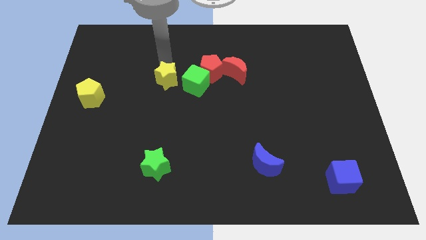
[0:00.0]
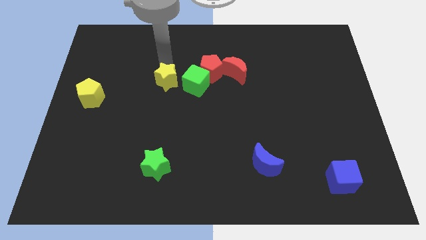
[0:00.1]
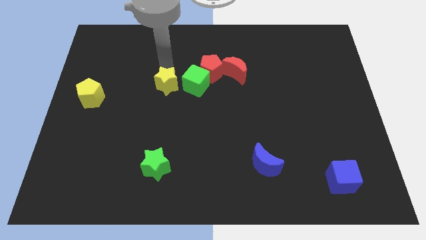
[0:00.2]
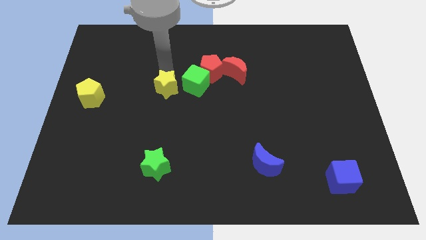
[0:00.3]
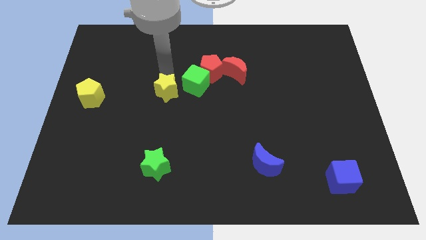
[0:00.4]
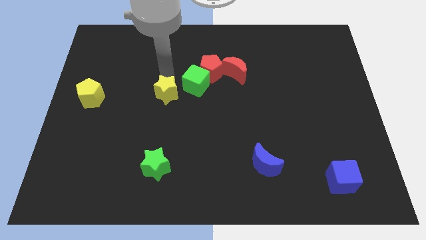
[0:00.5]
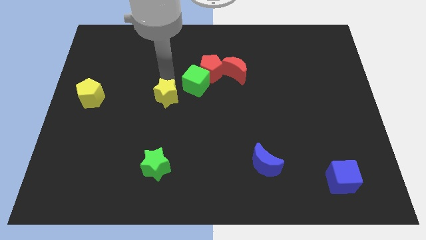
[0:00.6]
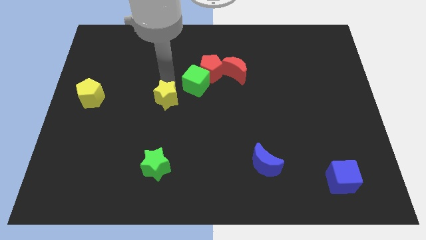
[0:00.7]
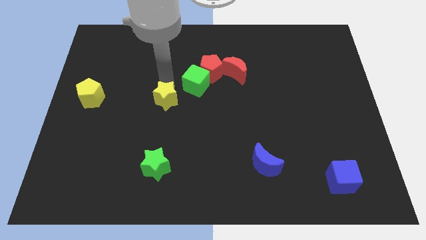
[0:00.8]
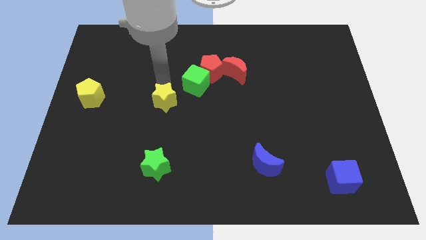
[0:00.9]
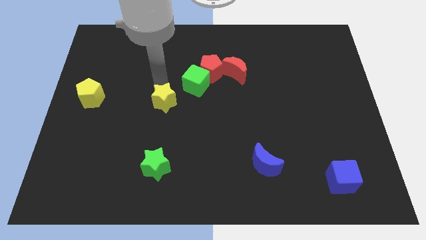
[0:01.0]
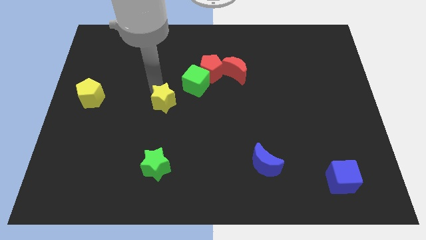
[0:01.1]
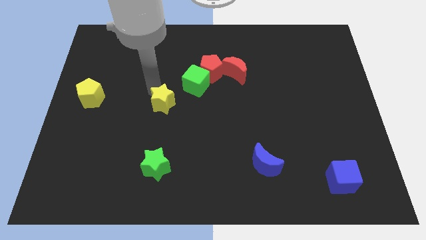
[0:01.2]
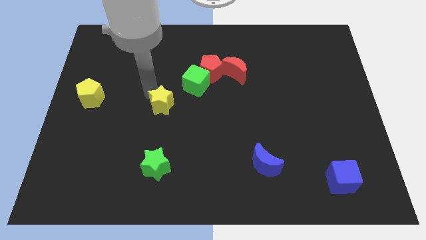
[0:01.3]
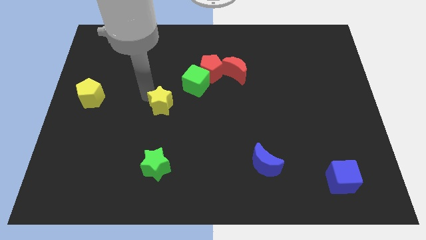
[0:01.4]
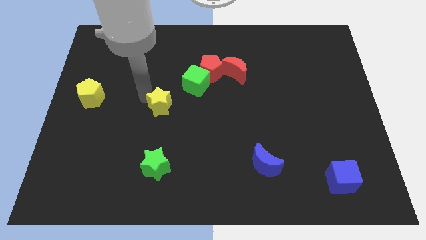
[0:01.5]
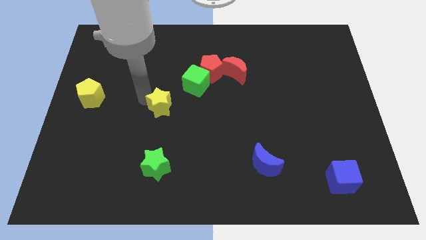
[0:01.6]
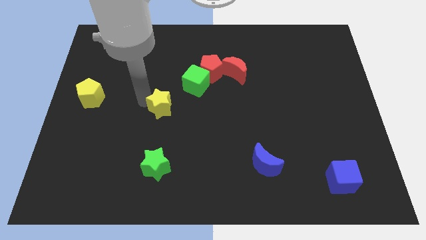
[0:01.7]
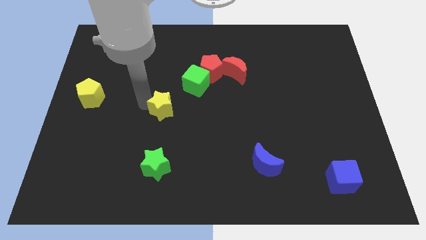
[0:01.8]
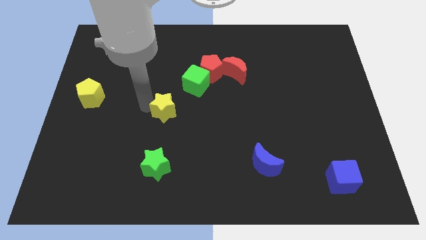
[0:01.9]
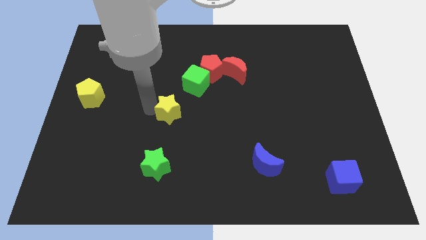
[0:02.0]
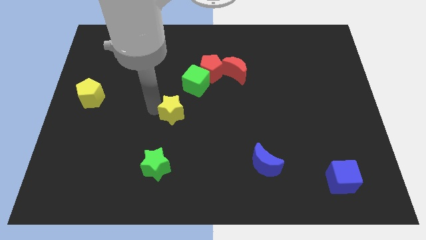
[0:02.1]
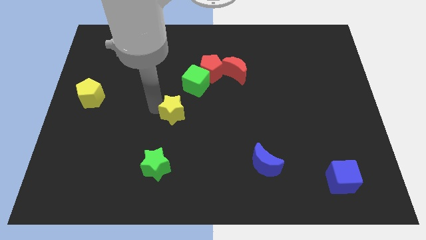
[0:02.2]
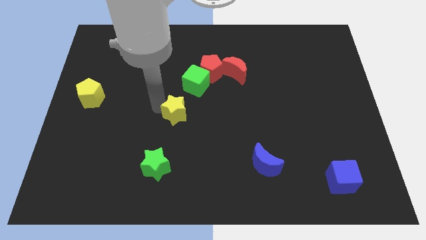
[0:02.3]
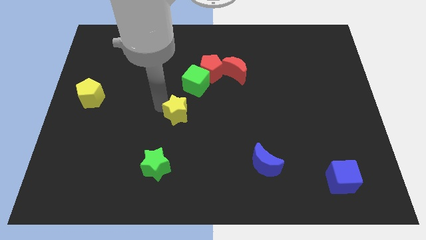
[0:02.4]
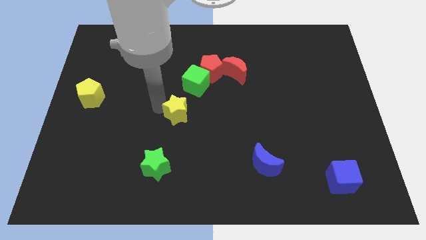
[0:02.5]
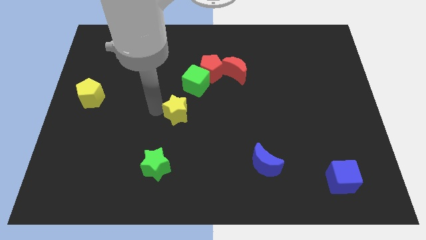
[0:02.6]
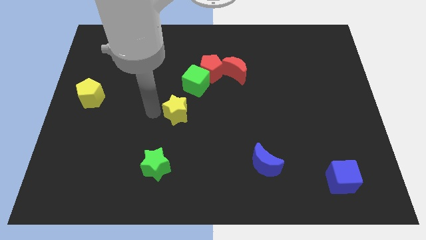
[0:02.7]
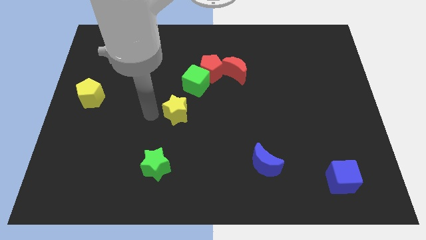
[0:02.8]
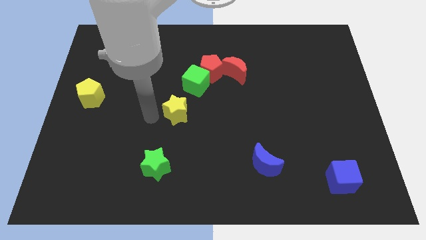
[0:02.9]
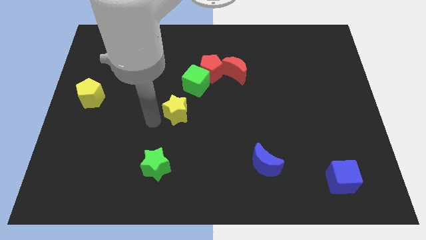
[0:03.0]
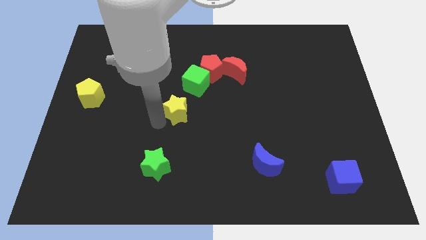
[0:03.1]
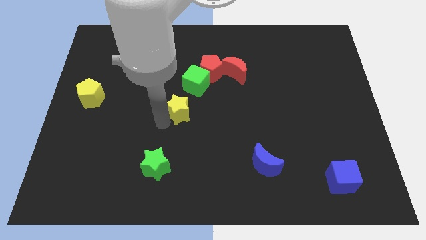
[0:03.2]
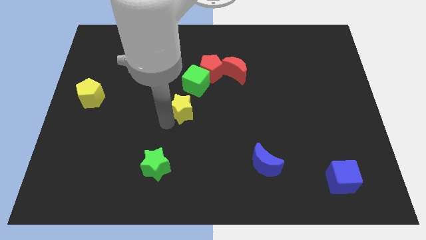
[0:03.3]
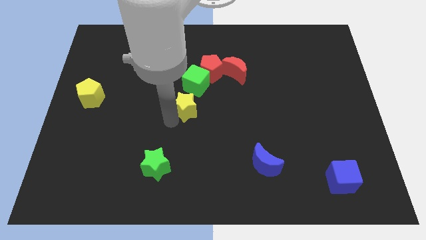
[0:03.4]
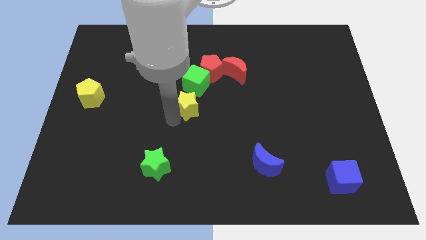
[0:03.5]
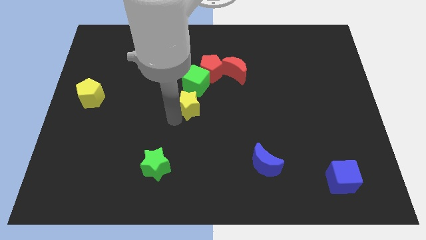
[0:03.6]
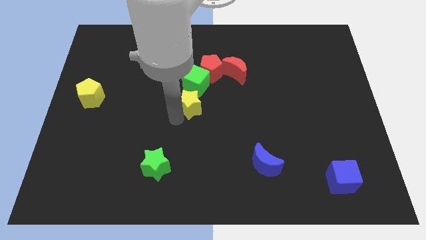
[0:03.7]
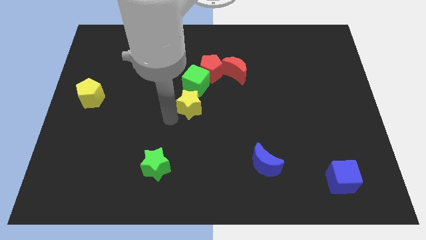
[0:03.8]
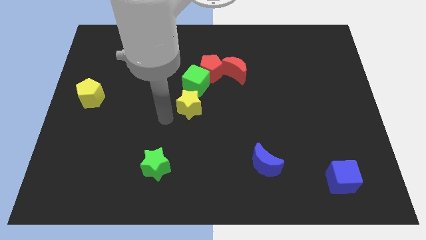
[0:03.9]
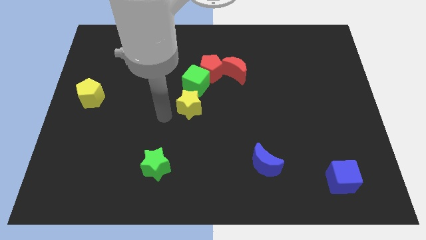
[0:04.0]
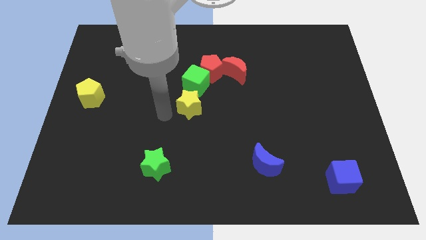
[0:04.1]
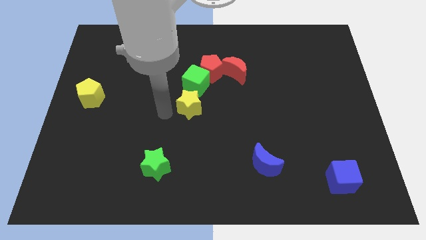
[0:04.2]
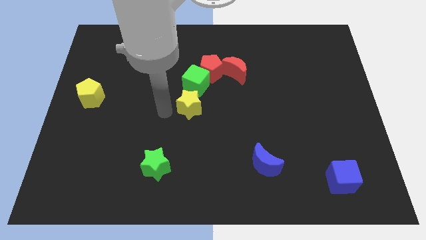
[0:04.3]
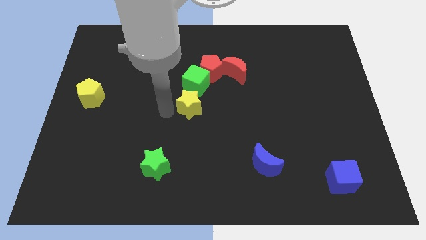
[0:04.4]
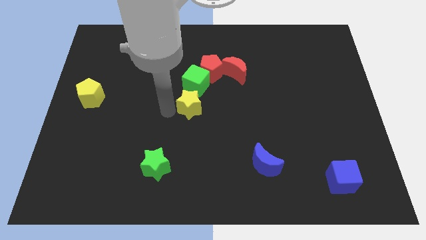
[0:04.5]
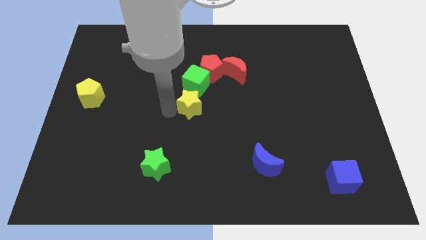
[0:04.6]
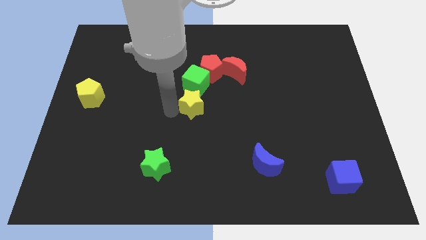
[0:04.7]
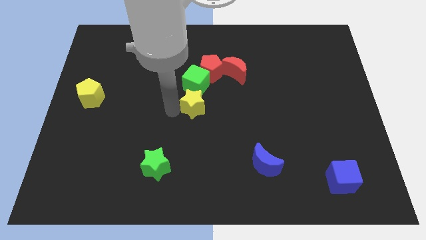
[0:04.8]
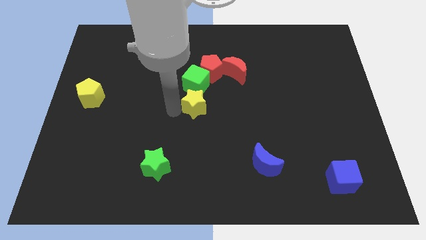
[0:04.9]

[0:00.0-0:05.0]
push the yellow star to the bottom of the green cube

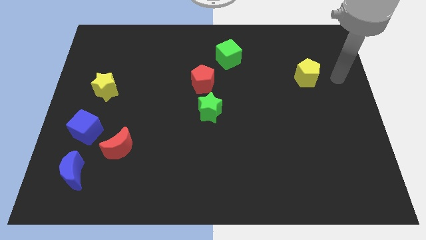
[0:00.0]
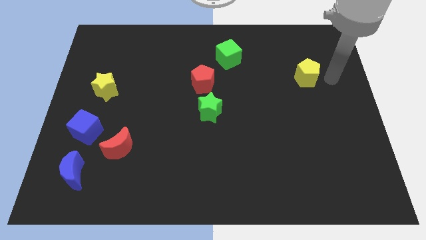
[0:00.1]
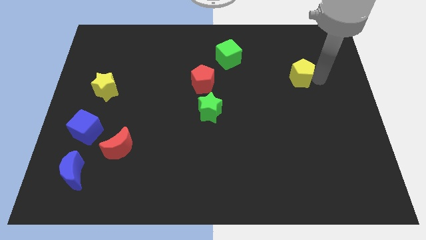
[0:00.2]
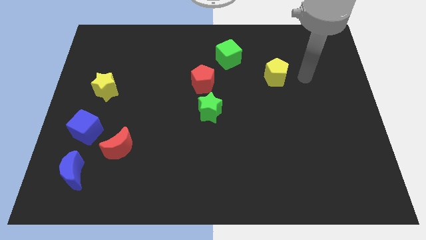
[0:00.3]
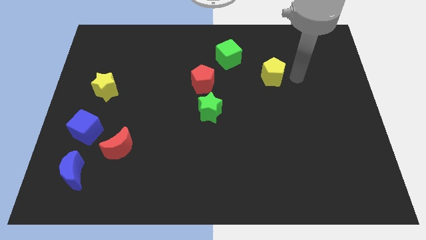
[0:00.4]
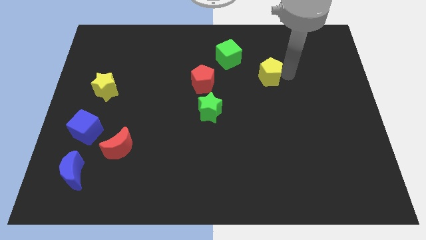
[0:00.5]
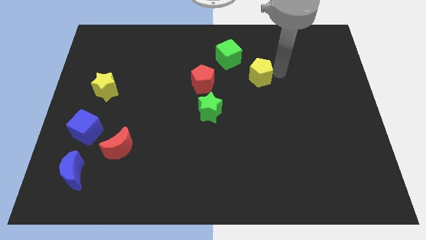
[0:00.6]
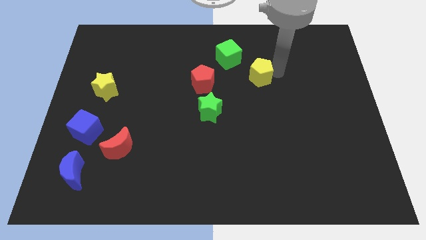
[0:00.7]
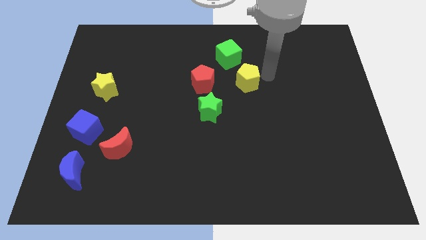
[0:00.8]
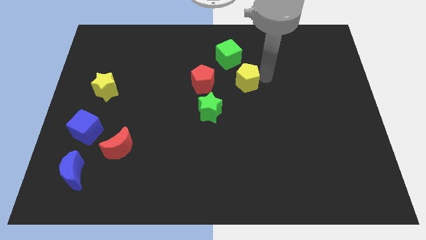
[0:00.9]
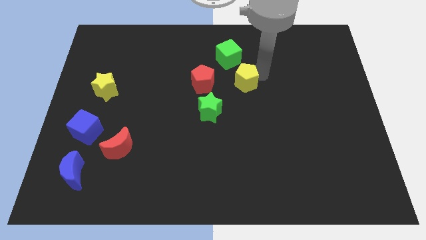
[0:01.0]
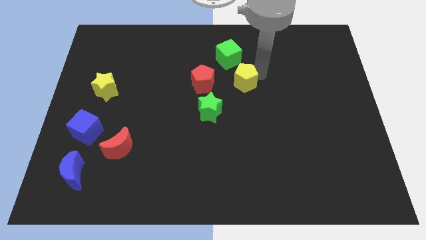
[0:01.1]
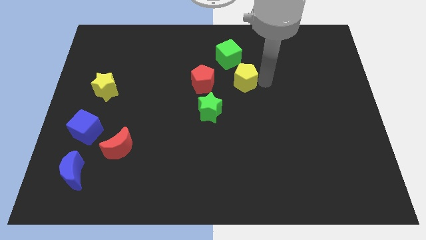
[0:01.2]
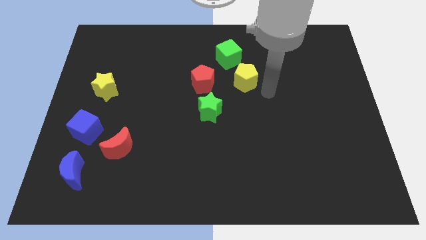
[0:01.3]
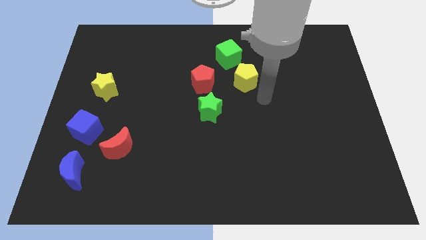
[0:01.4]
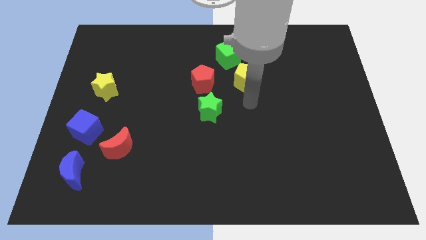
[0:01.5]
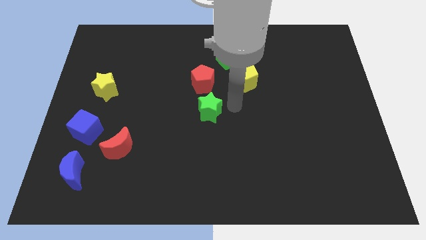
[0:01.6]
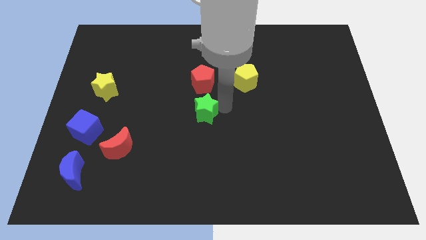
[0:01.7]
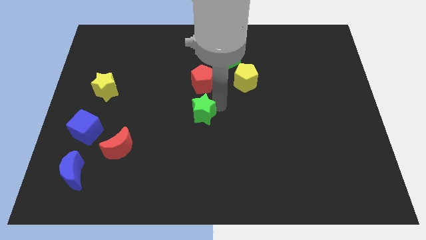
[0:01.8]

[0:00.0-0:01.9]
push the yellow pentagon parallel to the right of the red pentagon

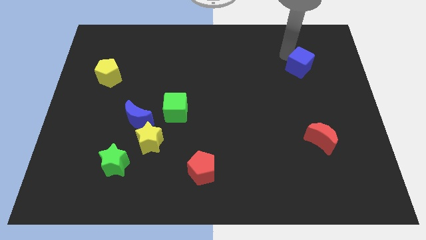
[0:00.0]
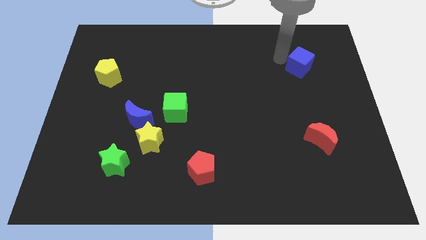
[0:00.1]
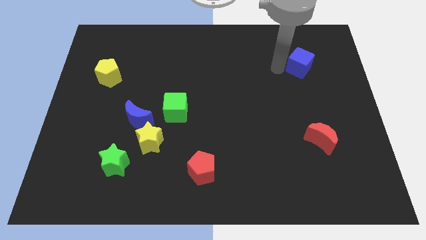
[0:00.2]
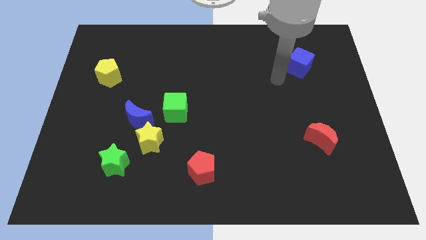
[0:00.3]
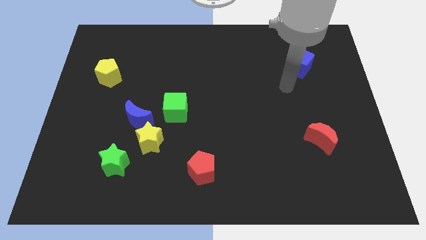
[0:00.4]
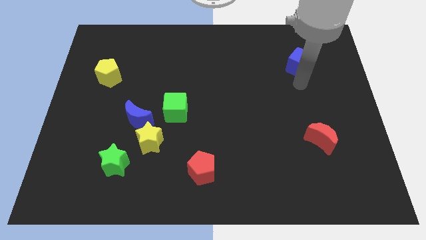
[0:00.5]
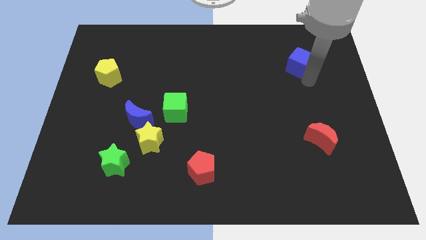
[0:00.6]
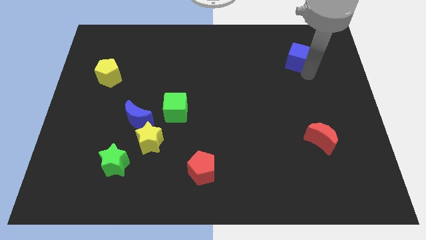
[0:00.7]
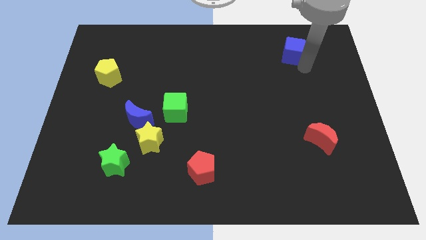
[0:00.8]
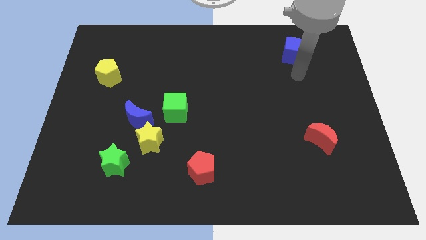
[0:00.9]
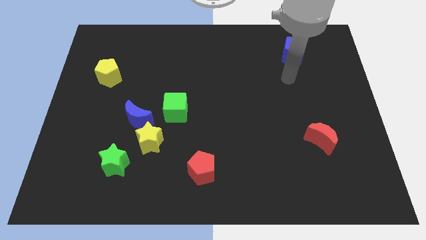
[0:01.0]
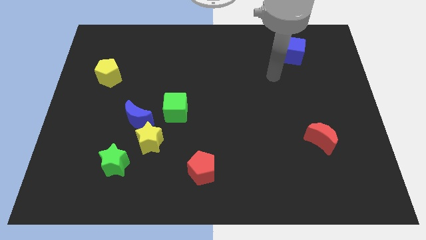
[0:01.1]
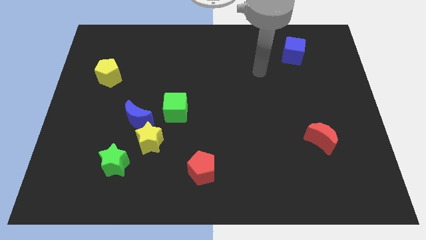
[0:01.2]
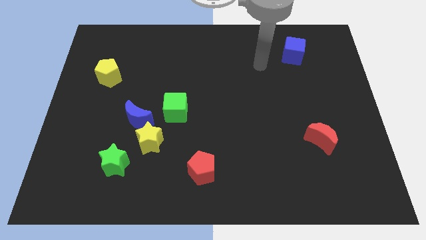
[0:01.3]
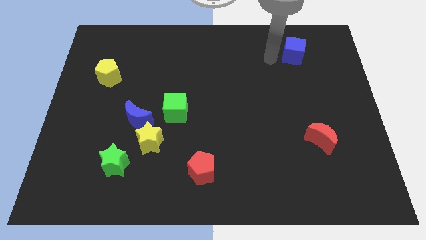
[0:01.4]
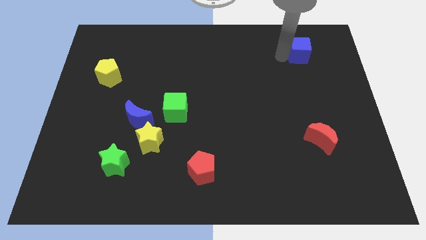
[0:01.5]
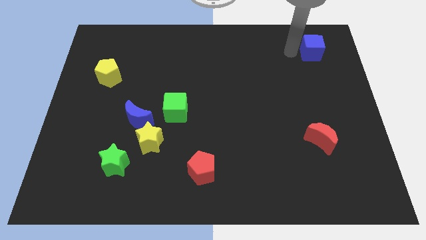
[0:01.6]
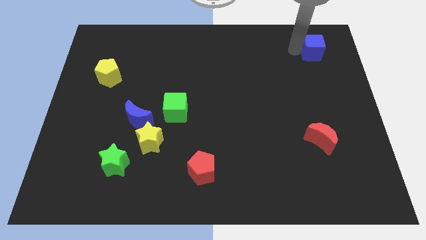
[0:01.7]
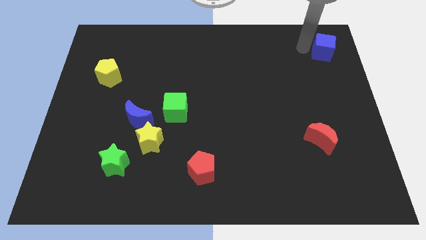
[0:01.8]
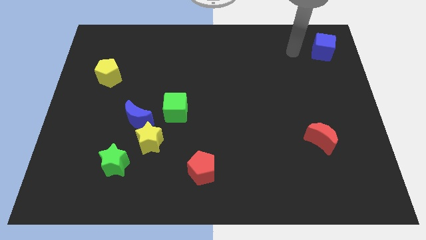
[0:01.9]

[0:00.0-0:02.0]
move the blue cube vertically at the top side of the red moon
